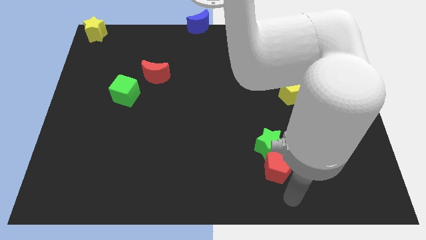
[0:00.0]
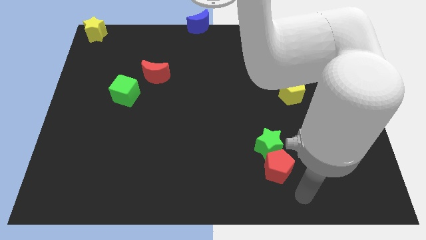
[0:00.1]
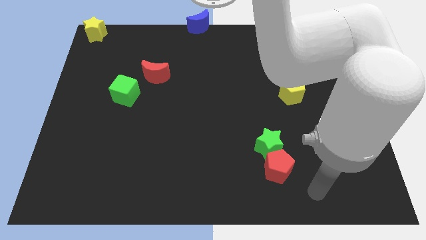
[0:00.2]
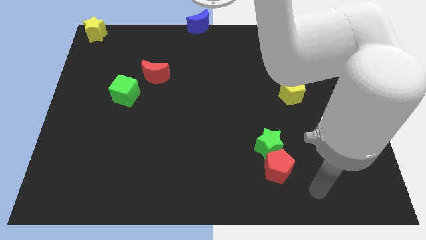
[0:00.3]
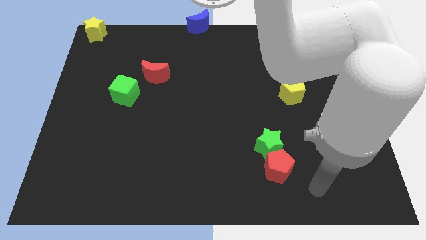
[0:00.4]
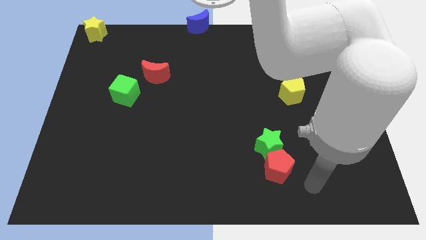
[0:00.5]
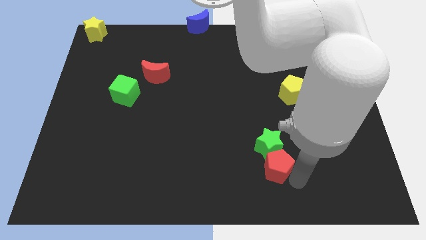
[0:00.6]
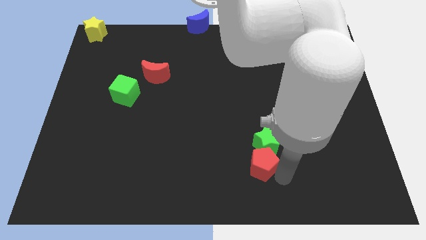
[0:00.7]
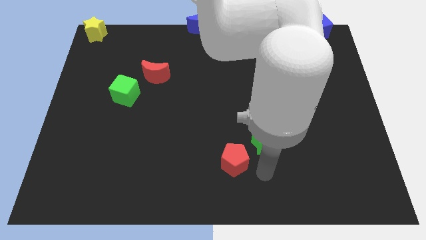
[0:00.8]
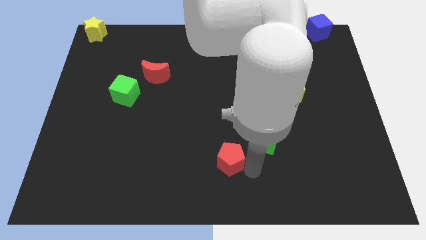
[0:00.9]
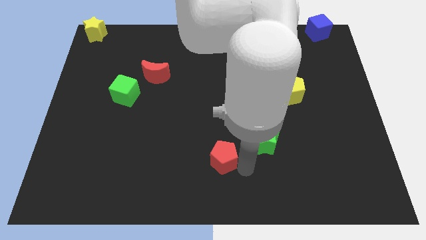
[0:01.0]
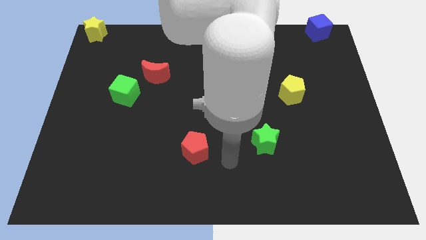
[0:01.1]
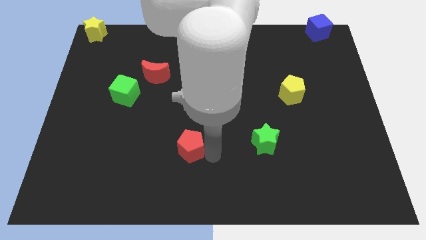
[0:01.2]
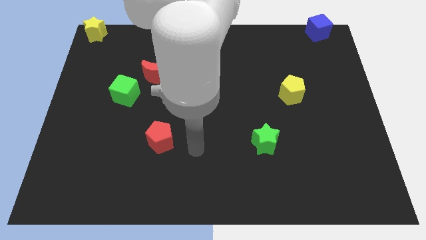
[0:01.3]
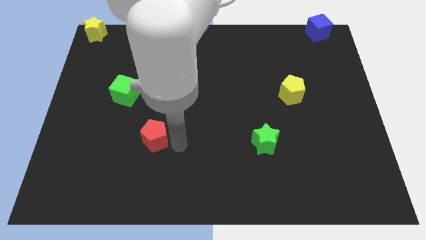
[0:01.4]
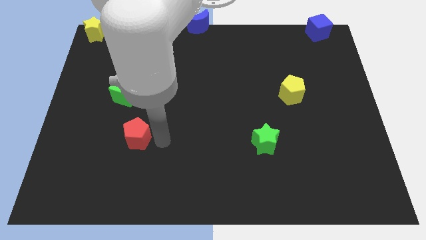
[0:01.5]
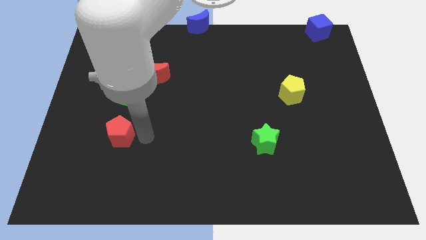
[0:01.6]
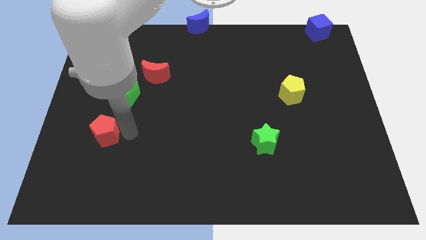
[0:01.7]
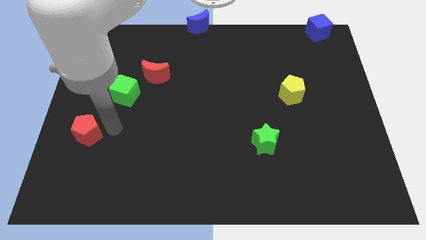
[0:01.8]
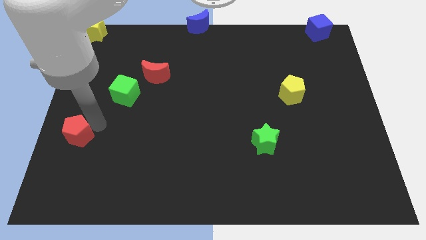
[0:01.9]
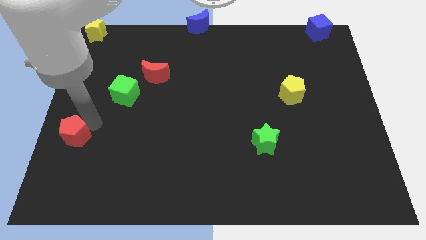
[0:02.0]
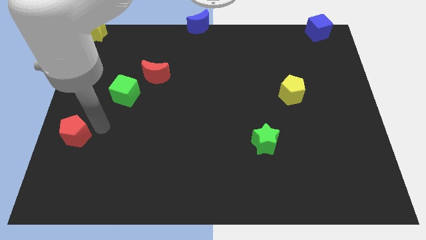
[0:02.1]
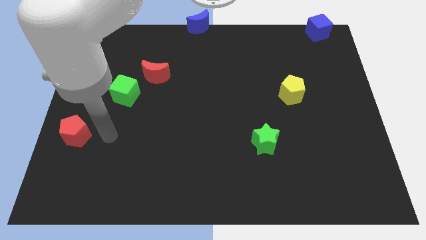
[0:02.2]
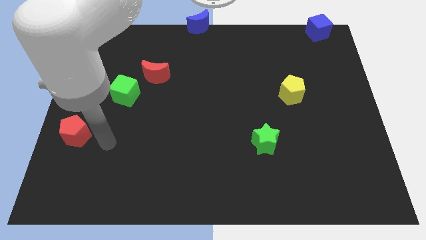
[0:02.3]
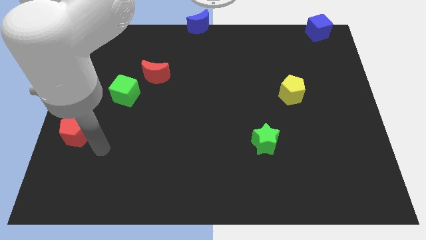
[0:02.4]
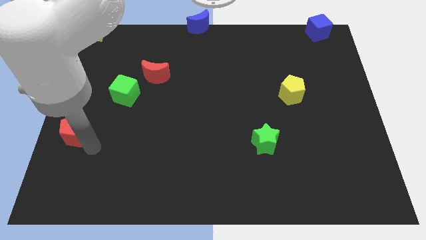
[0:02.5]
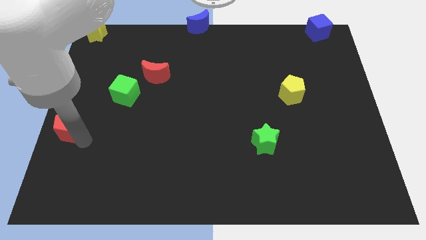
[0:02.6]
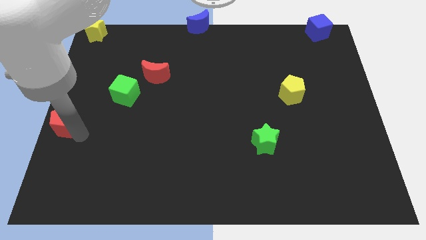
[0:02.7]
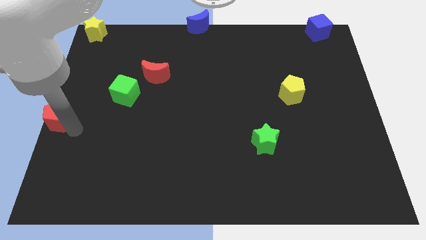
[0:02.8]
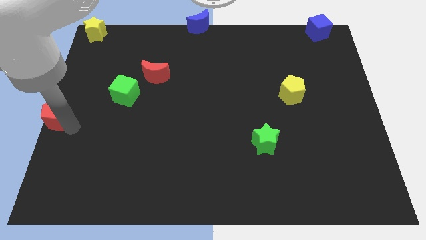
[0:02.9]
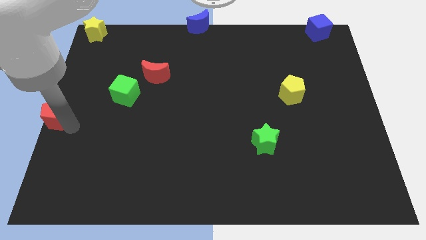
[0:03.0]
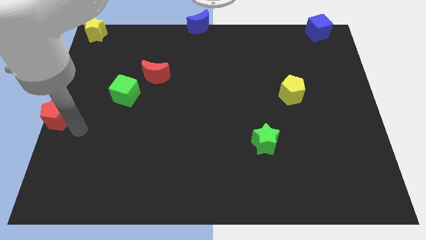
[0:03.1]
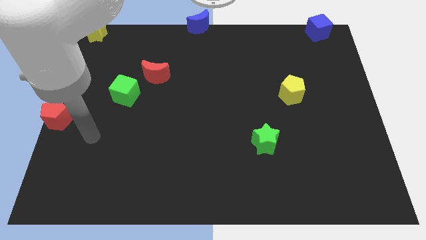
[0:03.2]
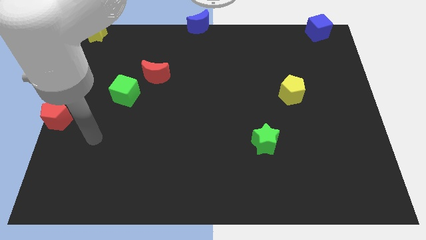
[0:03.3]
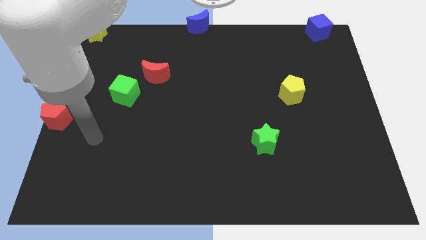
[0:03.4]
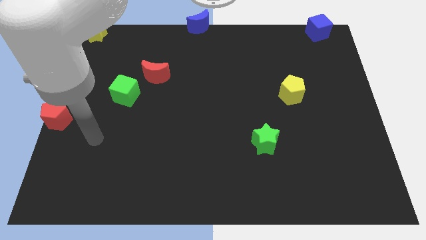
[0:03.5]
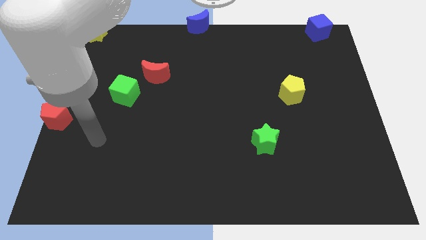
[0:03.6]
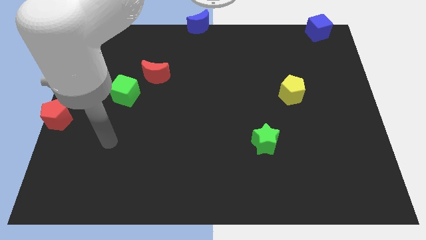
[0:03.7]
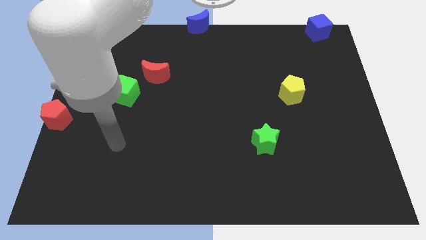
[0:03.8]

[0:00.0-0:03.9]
move the red pentagon to the center left

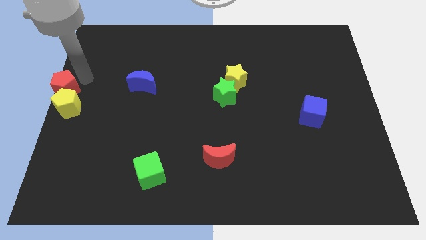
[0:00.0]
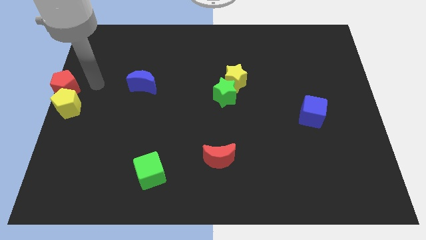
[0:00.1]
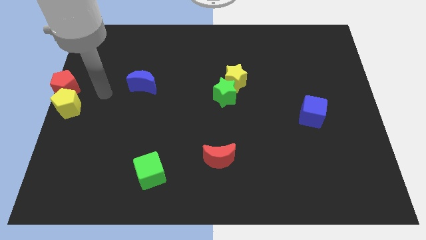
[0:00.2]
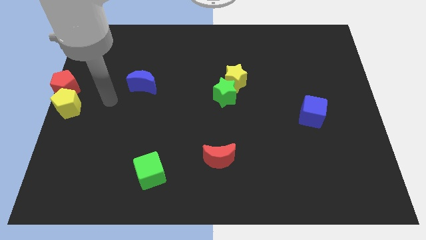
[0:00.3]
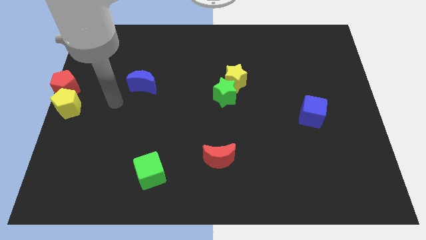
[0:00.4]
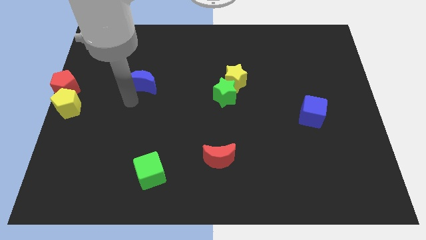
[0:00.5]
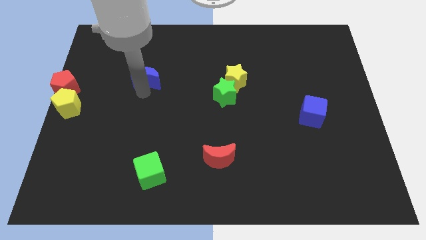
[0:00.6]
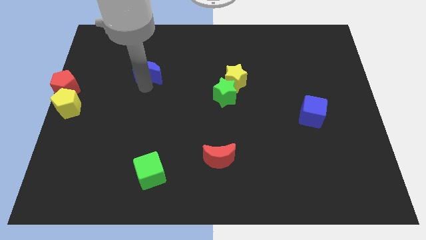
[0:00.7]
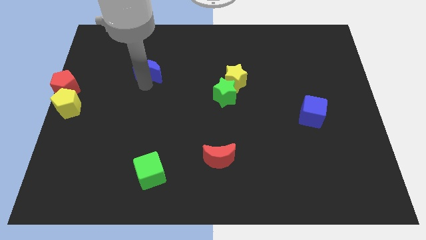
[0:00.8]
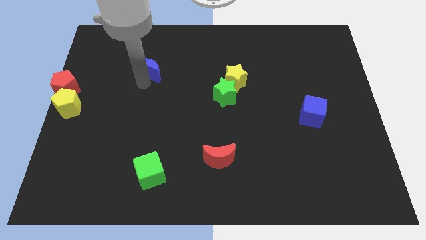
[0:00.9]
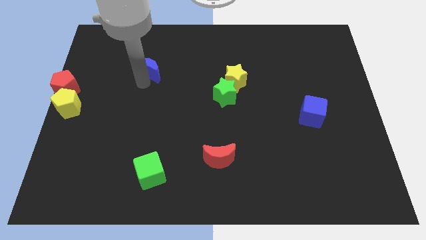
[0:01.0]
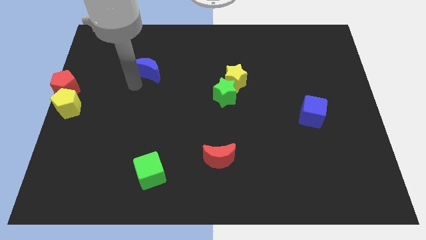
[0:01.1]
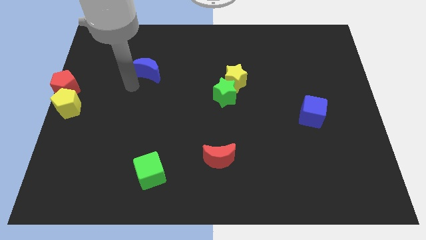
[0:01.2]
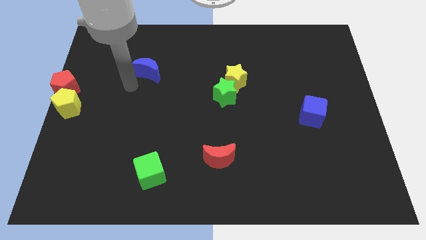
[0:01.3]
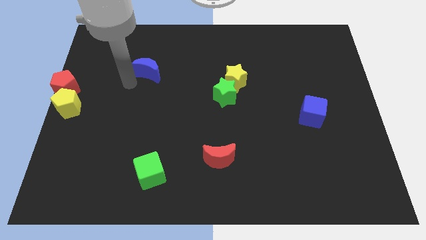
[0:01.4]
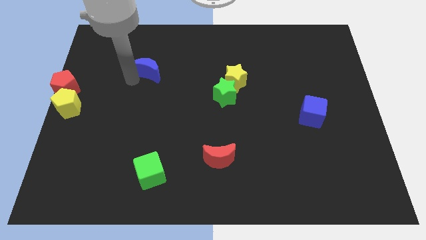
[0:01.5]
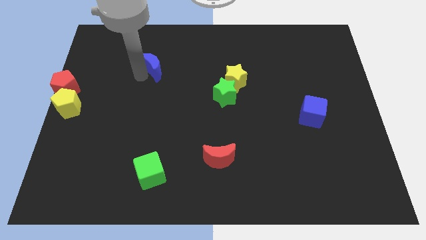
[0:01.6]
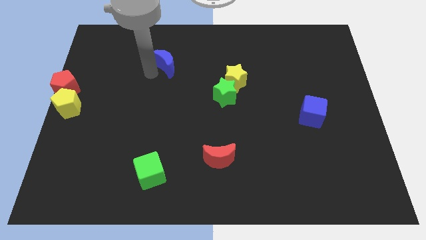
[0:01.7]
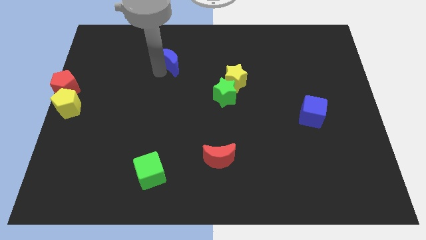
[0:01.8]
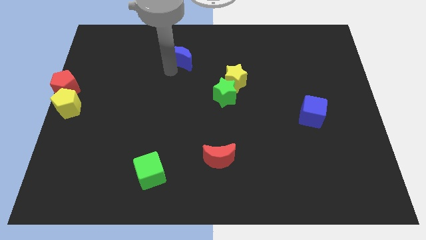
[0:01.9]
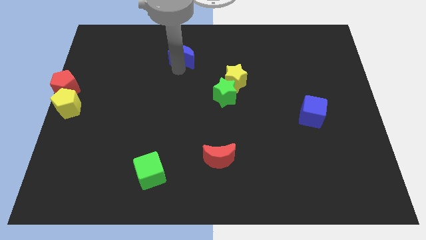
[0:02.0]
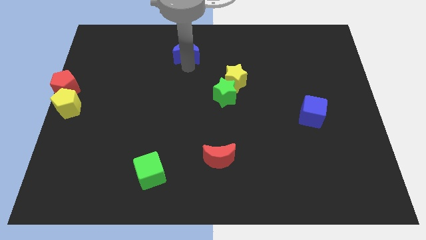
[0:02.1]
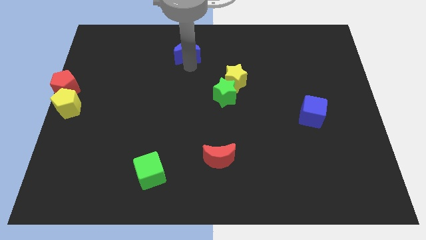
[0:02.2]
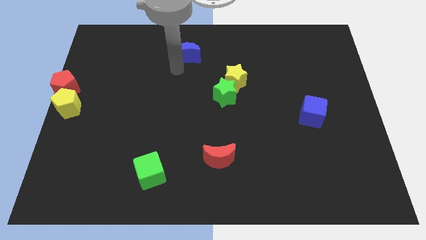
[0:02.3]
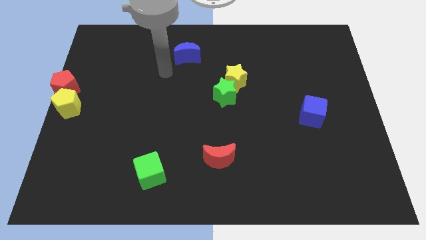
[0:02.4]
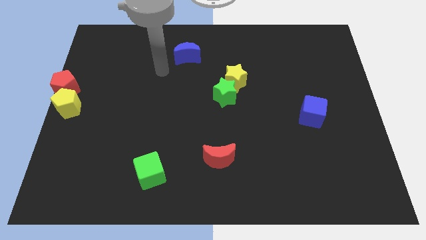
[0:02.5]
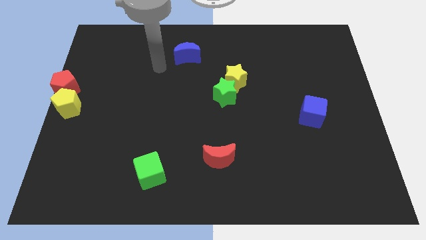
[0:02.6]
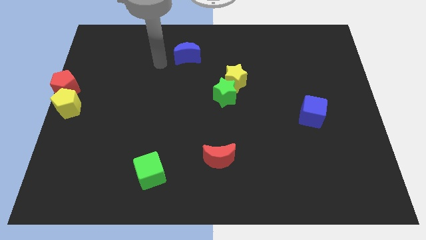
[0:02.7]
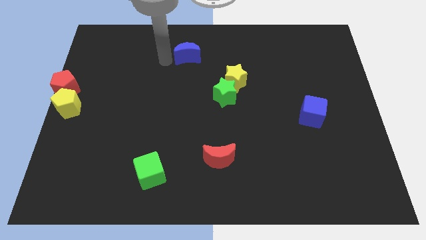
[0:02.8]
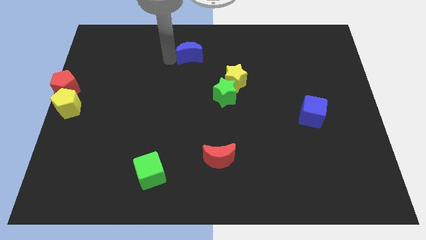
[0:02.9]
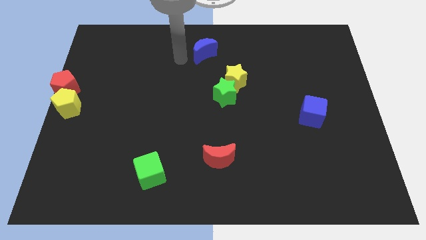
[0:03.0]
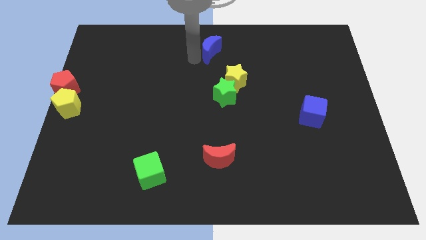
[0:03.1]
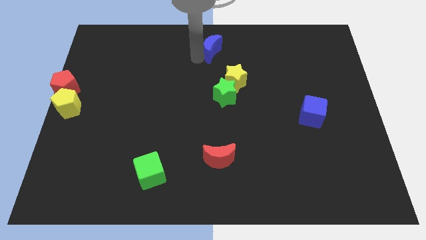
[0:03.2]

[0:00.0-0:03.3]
move the blue crescent to the top center

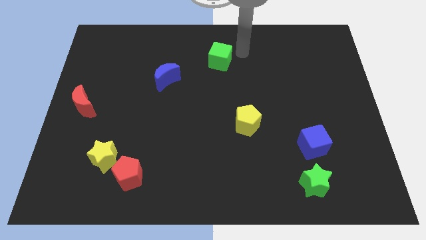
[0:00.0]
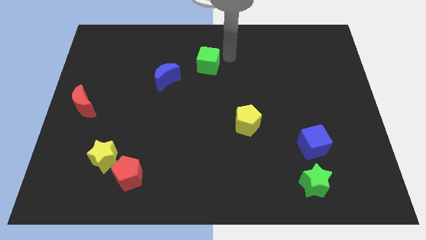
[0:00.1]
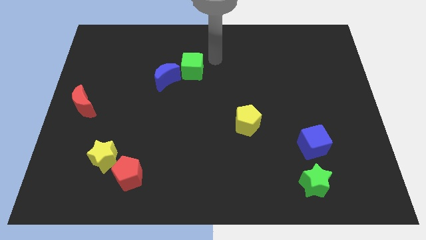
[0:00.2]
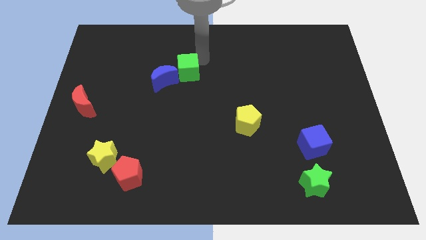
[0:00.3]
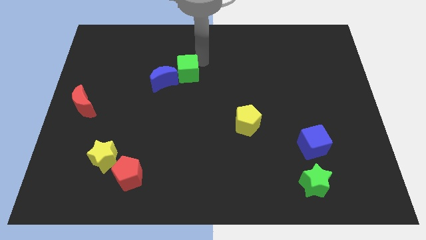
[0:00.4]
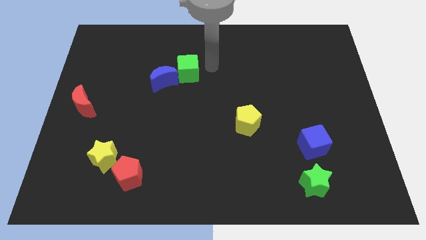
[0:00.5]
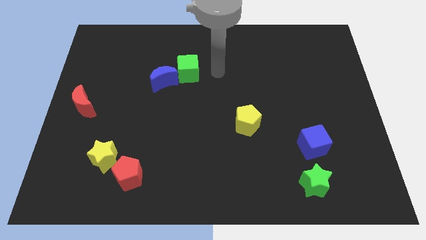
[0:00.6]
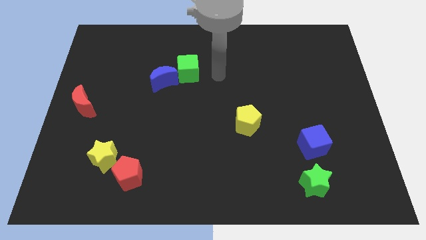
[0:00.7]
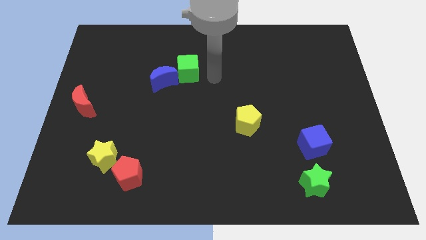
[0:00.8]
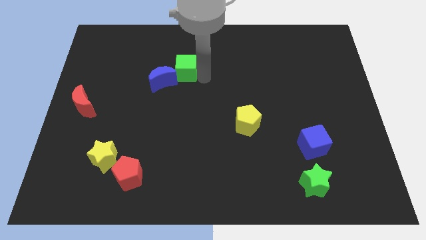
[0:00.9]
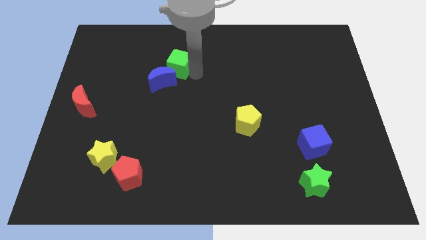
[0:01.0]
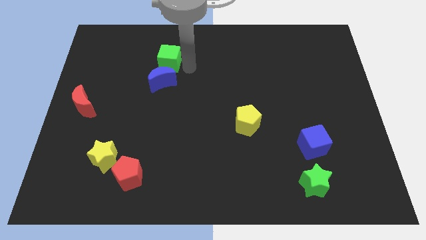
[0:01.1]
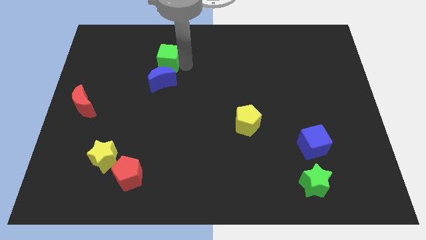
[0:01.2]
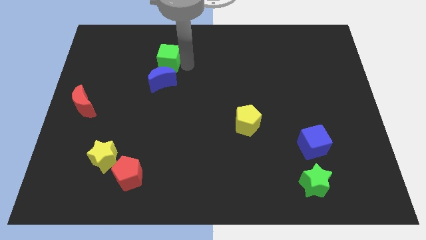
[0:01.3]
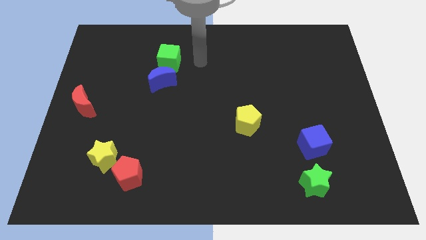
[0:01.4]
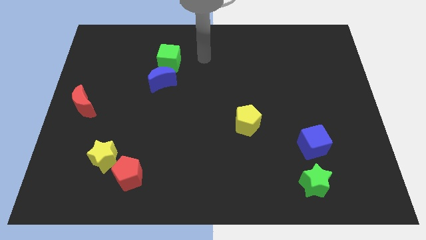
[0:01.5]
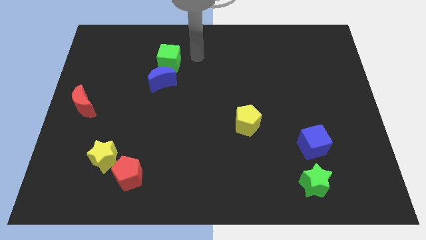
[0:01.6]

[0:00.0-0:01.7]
push the green cube into the blue crescent

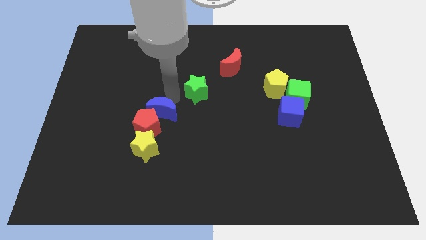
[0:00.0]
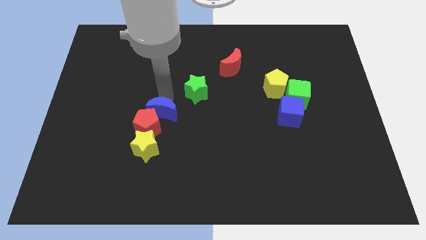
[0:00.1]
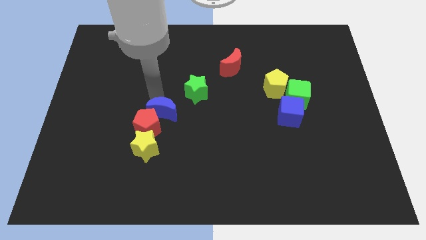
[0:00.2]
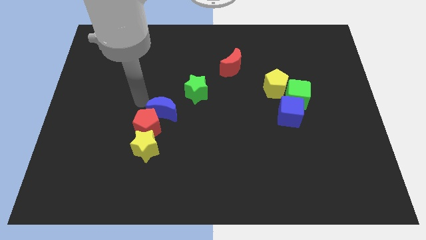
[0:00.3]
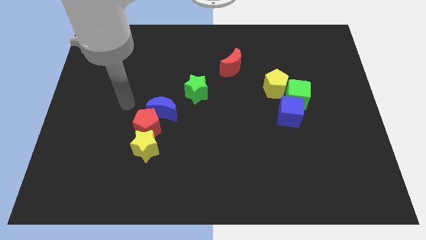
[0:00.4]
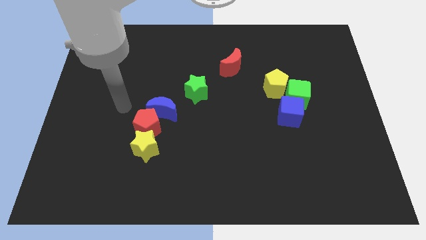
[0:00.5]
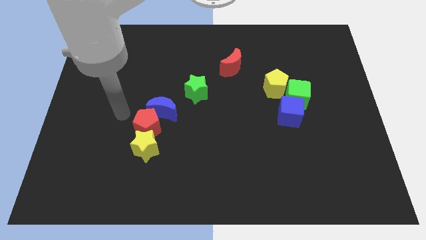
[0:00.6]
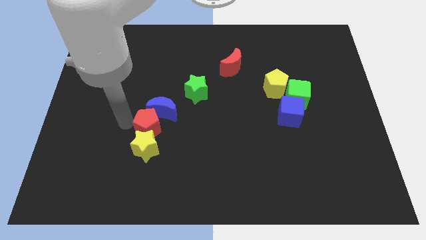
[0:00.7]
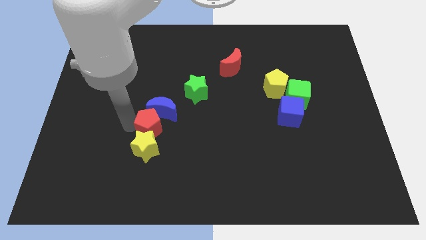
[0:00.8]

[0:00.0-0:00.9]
point your arm left to red pentagon
